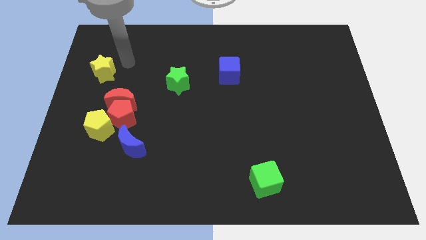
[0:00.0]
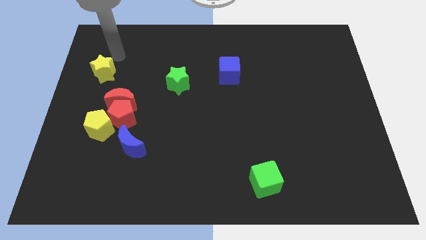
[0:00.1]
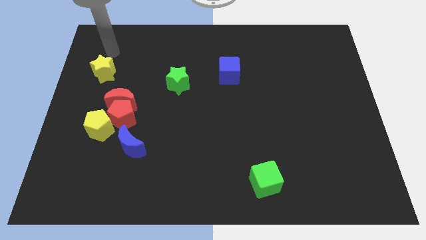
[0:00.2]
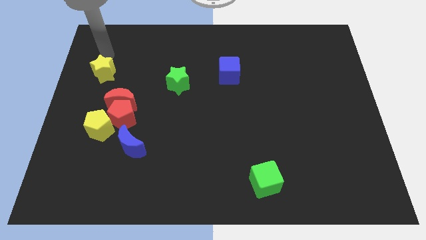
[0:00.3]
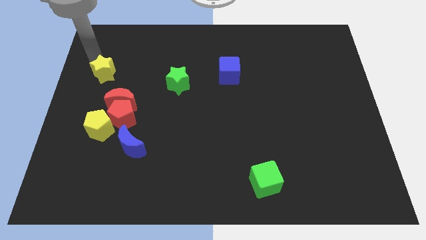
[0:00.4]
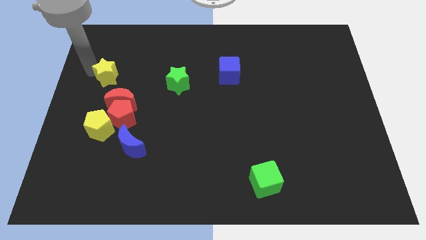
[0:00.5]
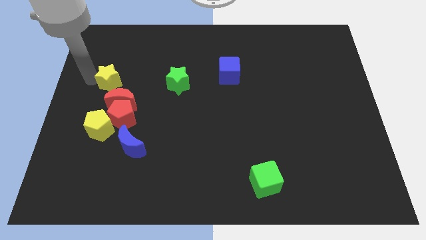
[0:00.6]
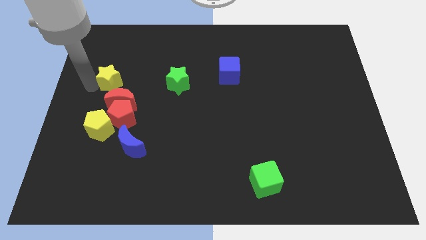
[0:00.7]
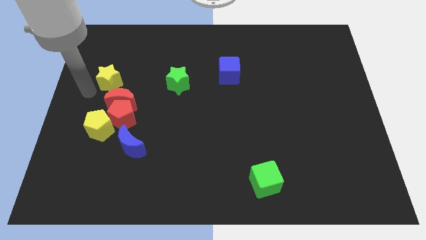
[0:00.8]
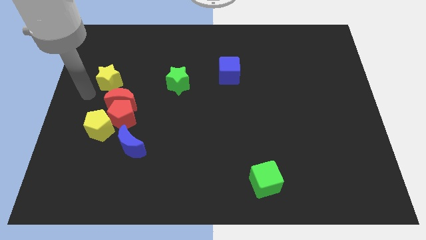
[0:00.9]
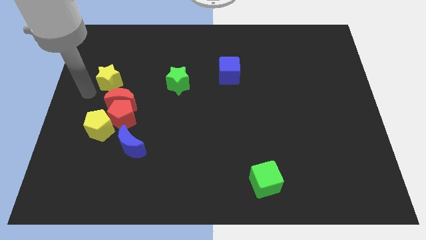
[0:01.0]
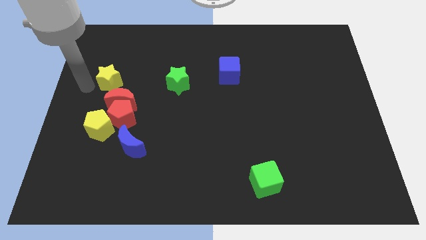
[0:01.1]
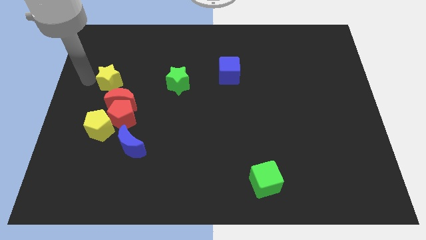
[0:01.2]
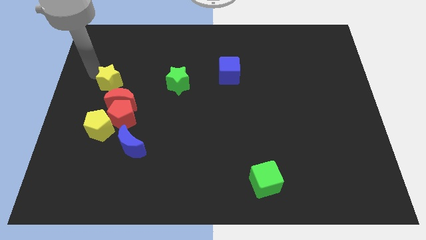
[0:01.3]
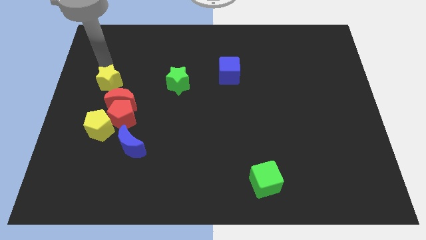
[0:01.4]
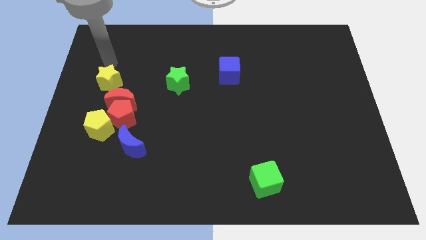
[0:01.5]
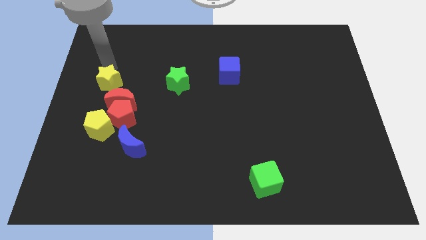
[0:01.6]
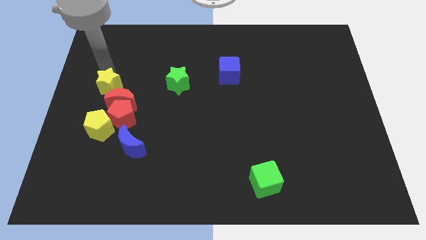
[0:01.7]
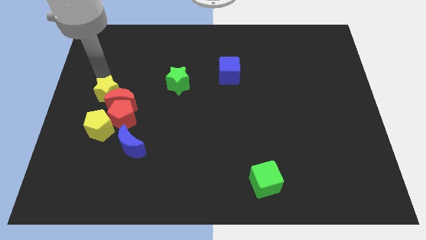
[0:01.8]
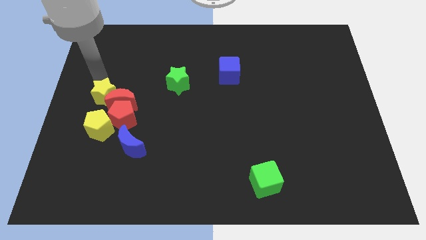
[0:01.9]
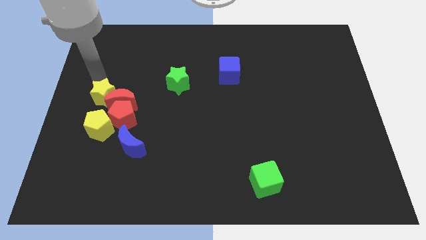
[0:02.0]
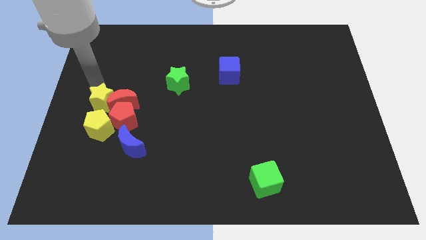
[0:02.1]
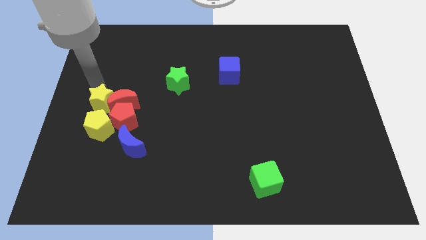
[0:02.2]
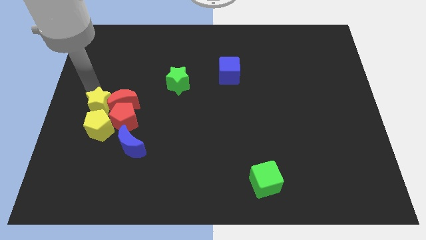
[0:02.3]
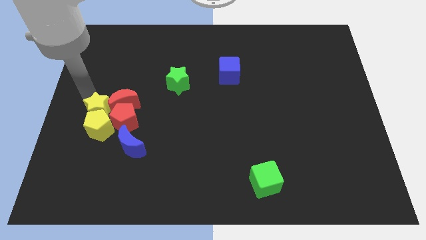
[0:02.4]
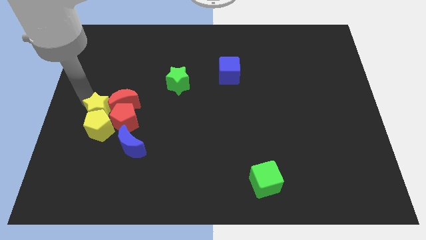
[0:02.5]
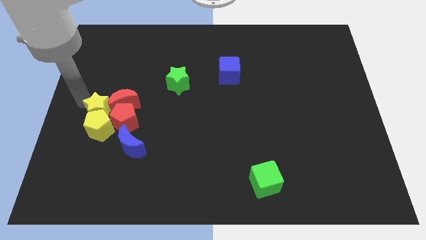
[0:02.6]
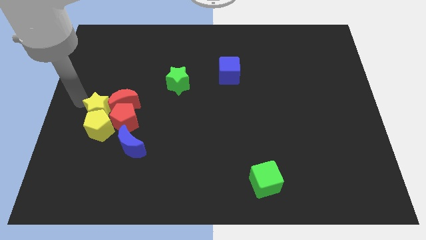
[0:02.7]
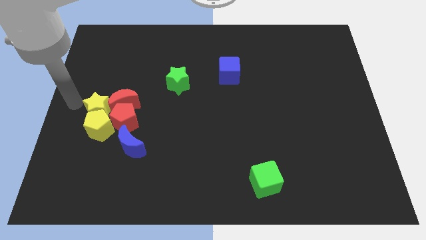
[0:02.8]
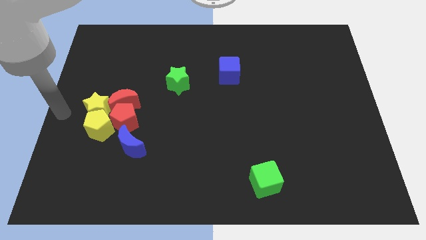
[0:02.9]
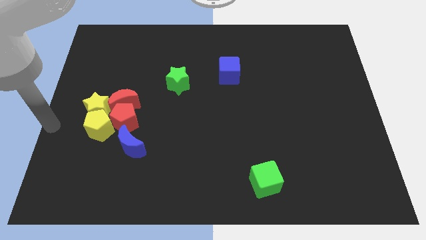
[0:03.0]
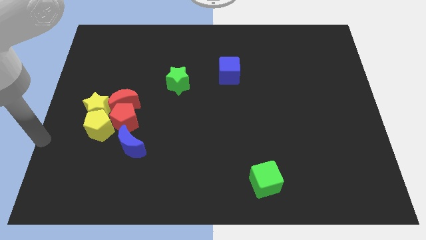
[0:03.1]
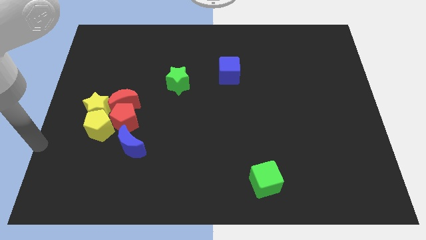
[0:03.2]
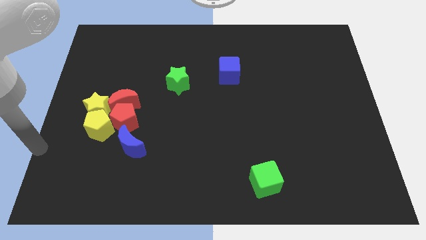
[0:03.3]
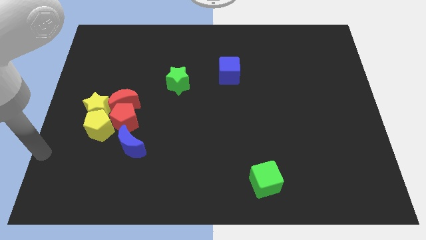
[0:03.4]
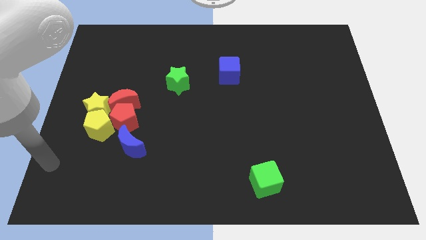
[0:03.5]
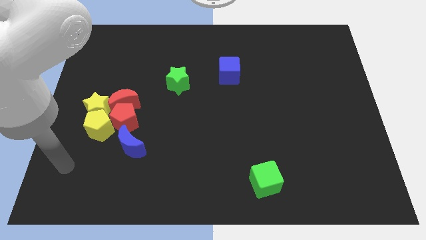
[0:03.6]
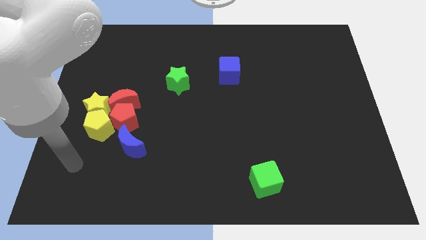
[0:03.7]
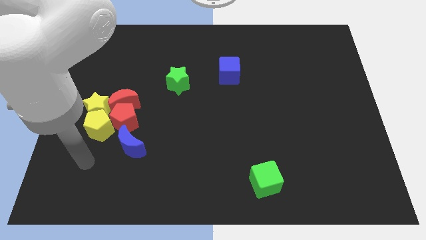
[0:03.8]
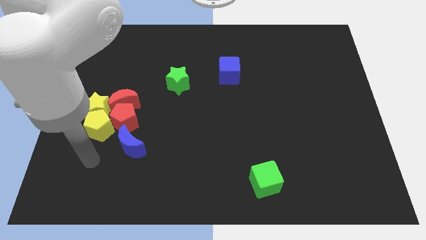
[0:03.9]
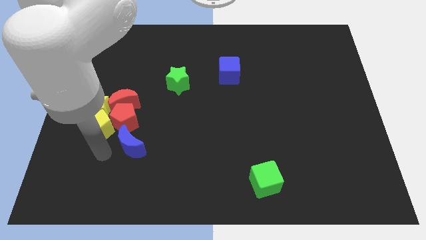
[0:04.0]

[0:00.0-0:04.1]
move the yellow star towards the yellow pentagon

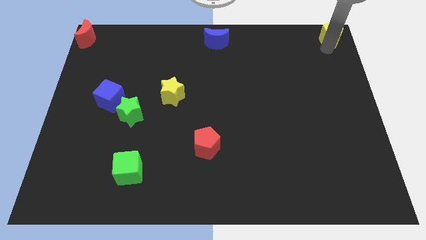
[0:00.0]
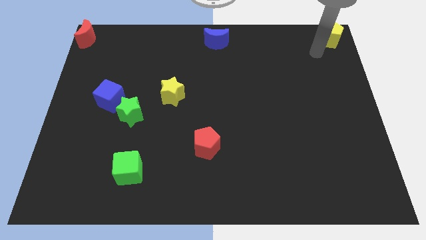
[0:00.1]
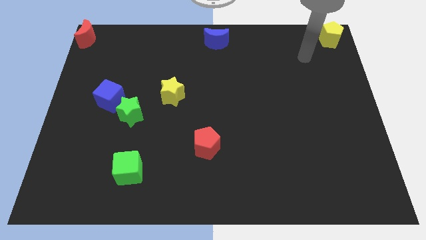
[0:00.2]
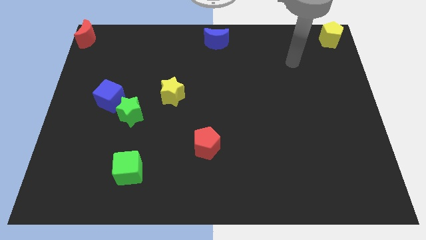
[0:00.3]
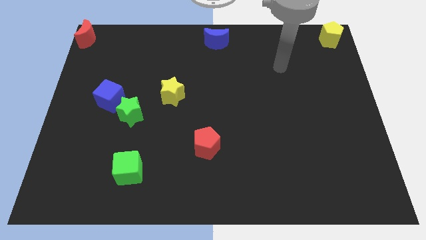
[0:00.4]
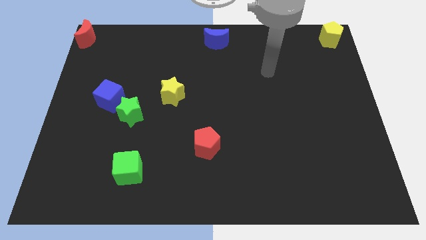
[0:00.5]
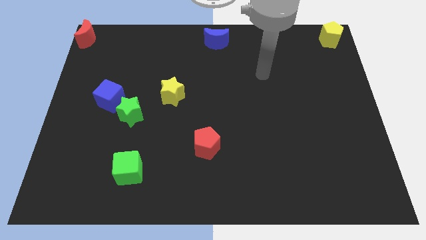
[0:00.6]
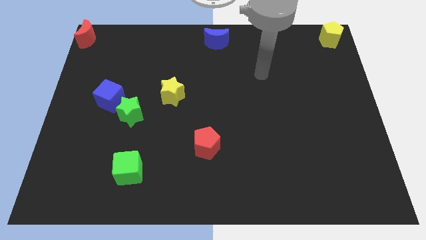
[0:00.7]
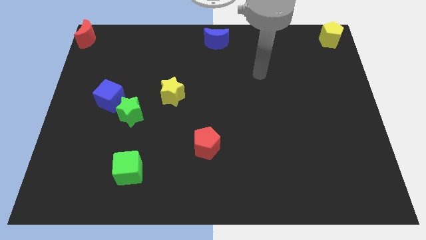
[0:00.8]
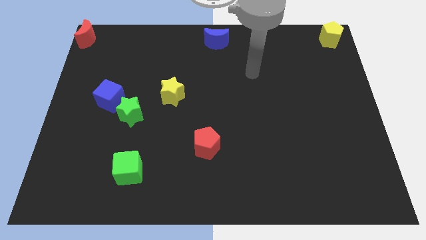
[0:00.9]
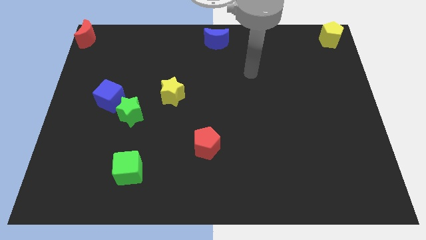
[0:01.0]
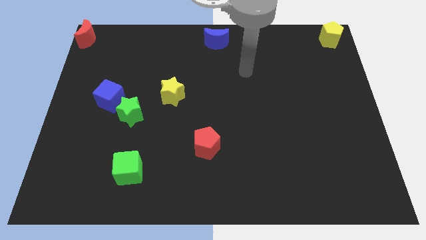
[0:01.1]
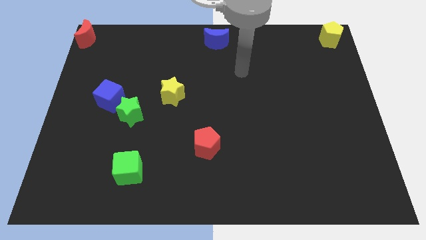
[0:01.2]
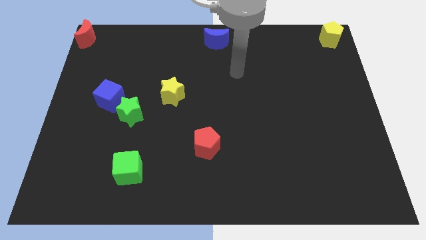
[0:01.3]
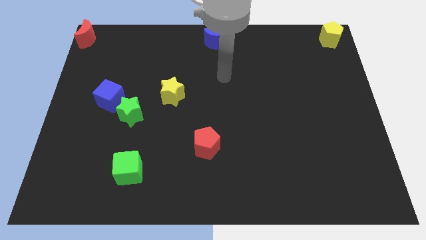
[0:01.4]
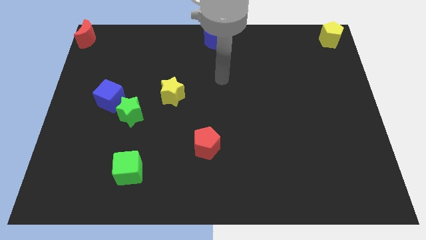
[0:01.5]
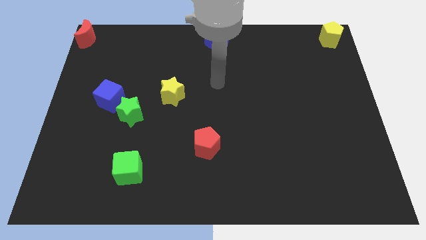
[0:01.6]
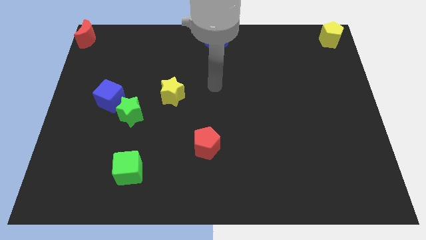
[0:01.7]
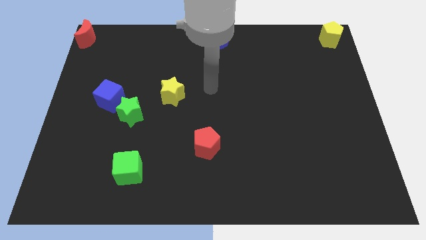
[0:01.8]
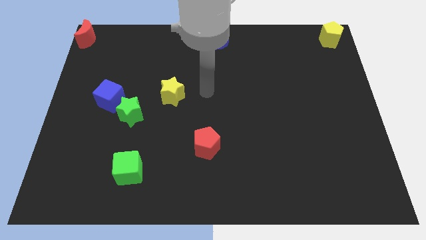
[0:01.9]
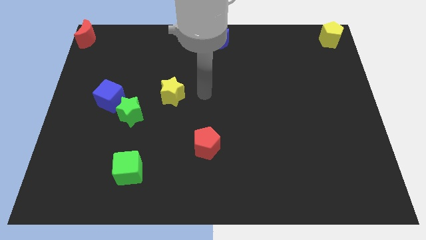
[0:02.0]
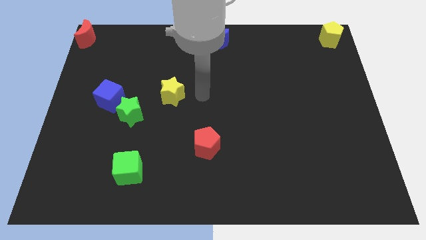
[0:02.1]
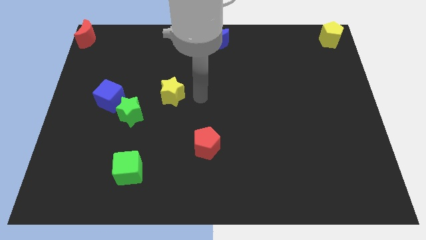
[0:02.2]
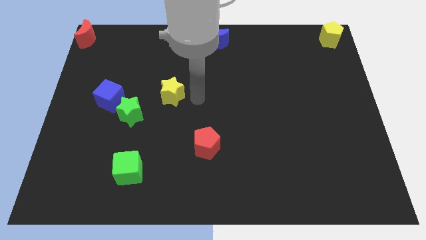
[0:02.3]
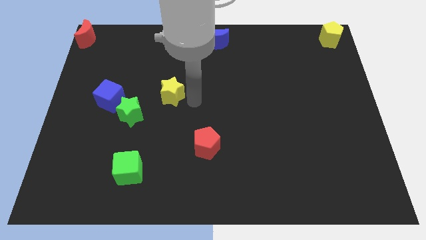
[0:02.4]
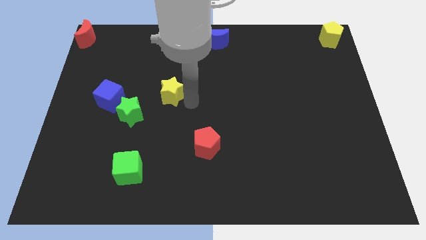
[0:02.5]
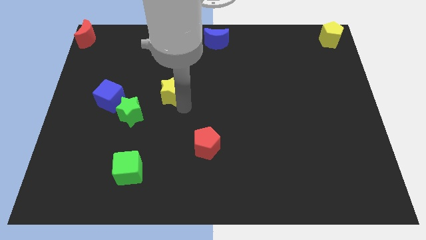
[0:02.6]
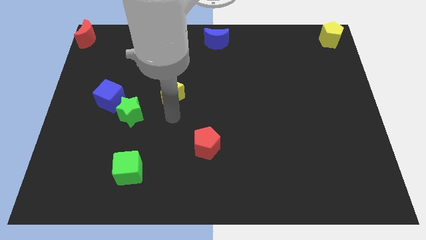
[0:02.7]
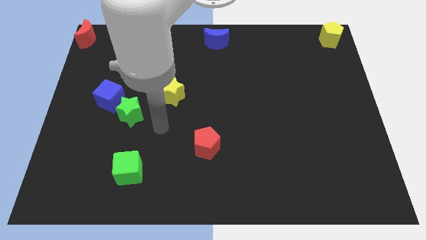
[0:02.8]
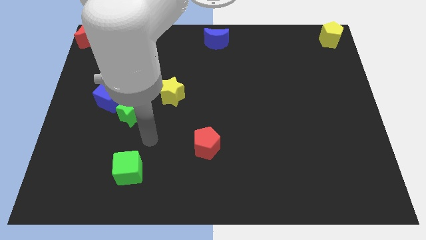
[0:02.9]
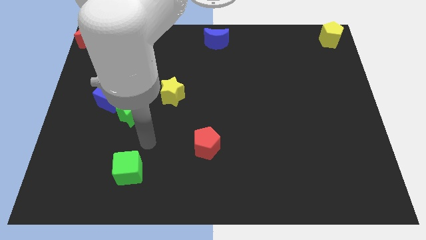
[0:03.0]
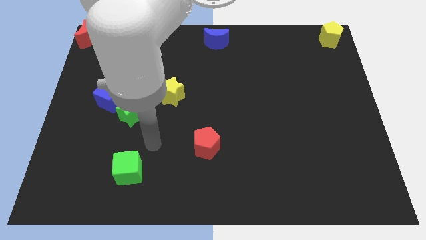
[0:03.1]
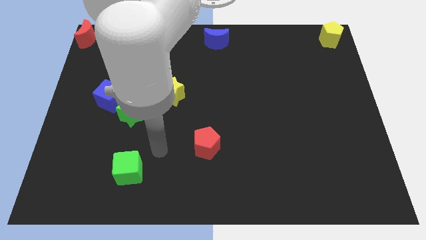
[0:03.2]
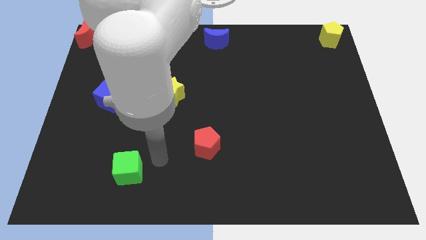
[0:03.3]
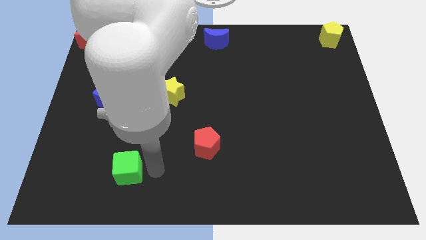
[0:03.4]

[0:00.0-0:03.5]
move the arm away from the yellow pentagon

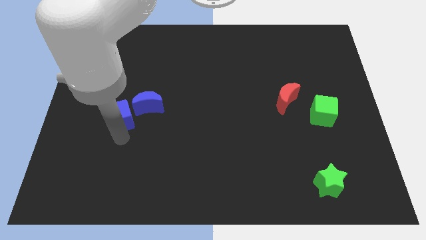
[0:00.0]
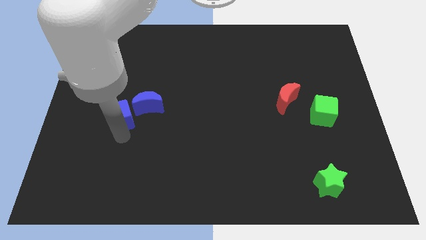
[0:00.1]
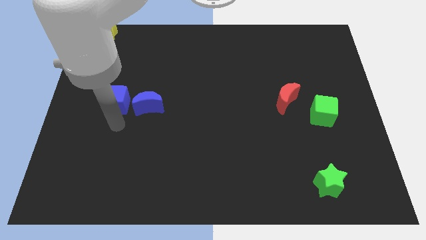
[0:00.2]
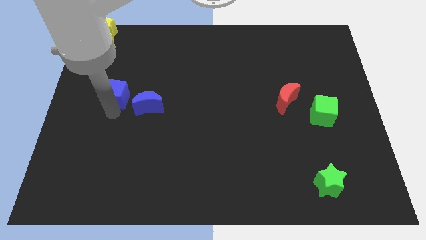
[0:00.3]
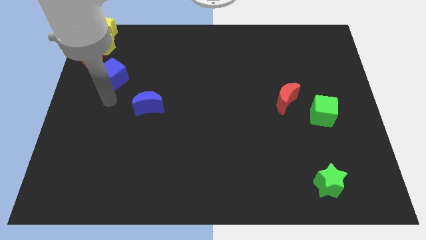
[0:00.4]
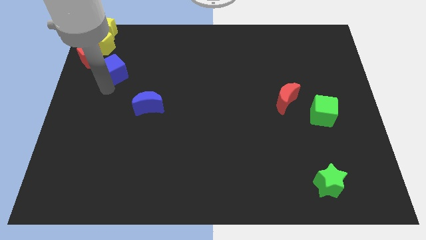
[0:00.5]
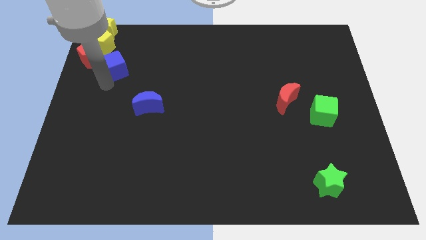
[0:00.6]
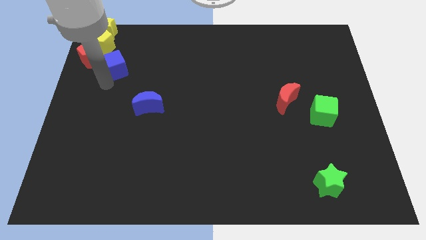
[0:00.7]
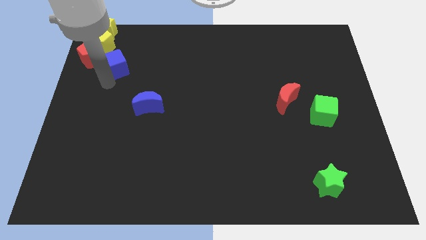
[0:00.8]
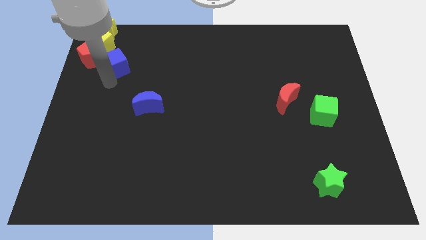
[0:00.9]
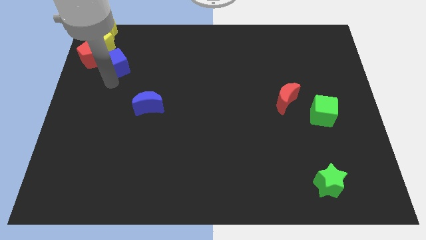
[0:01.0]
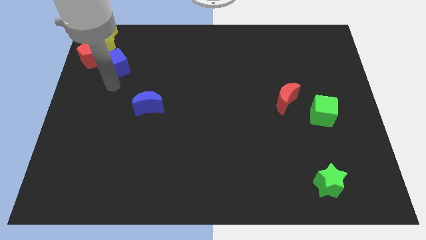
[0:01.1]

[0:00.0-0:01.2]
slide blue cube towards top left
